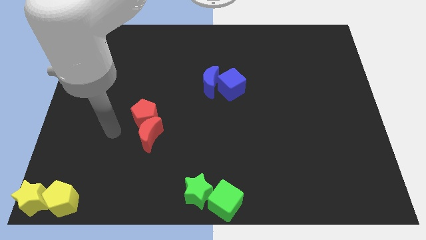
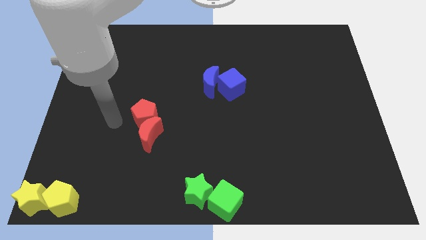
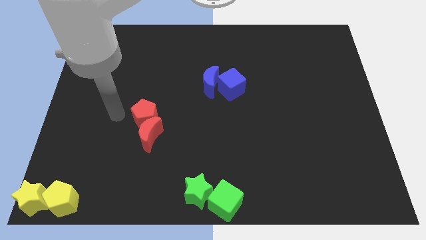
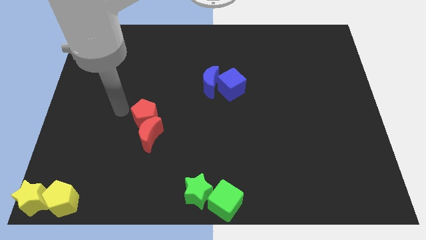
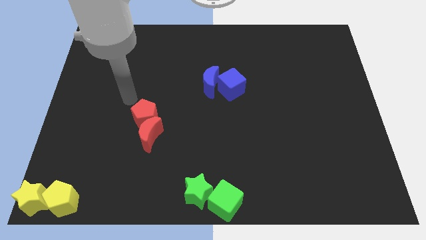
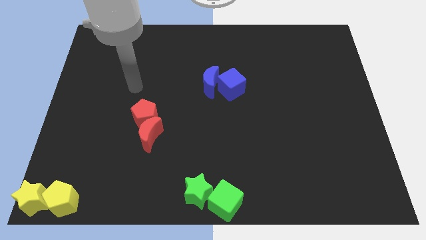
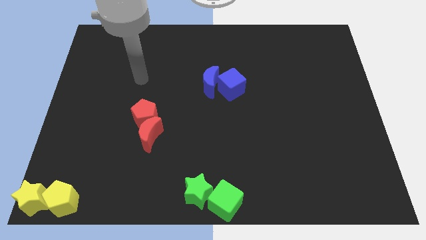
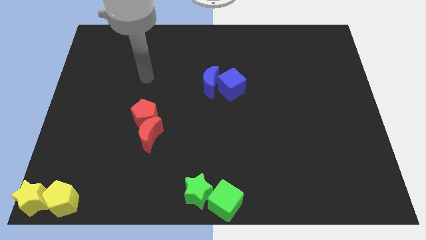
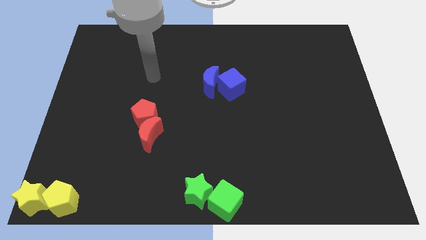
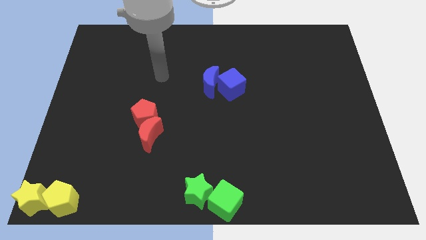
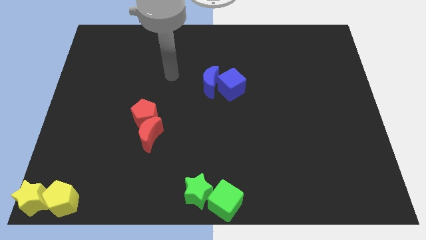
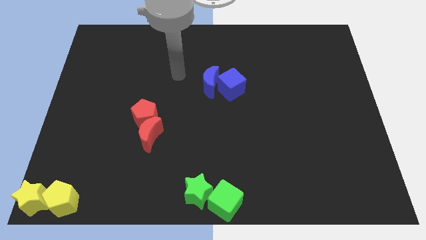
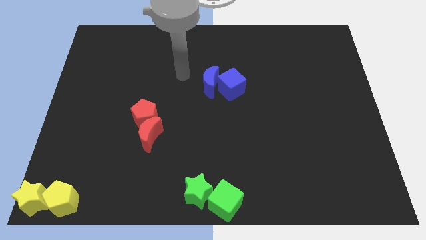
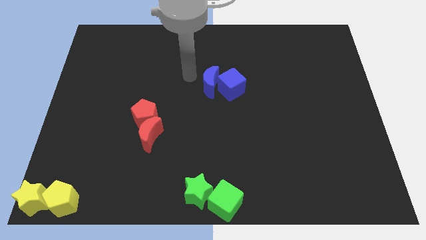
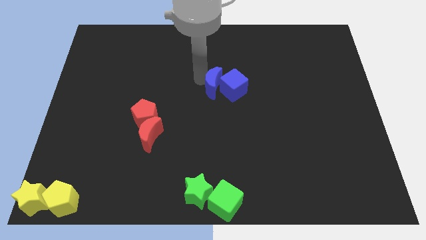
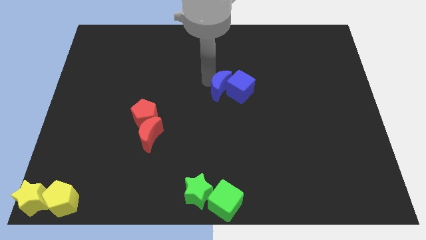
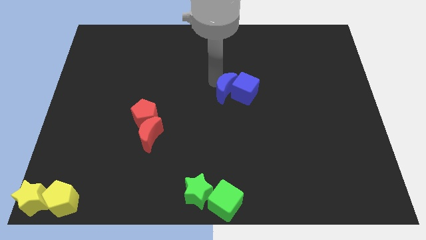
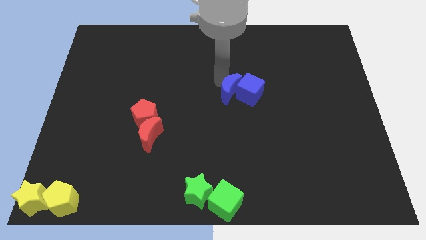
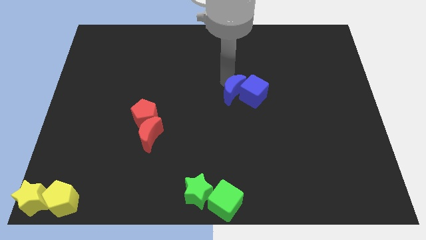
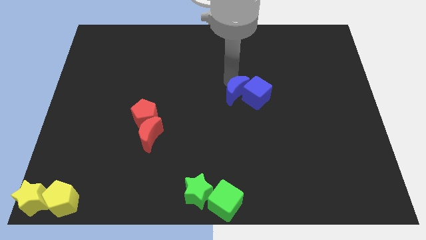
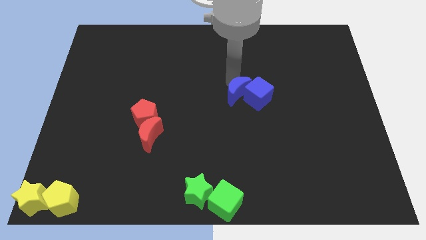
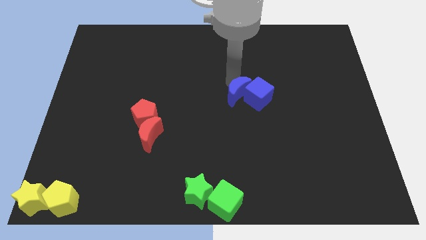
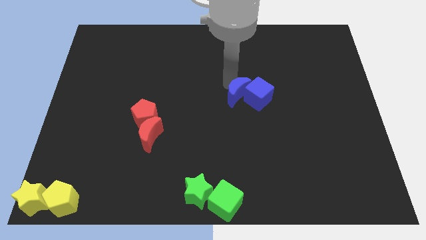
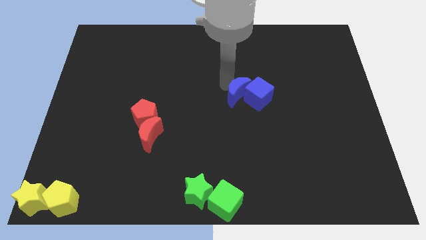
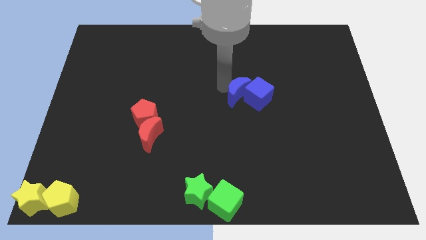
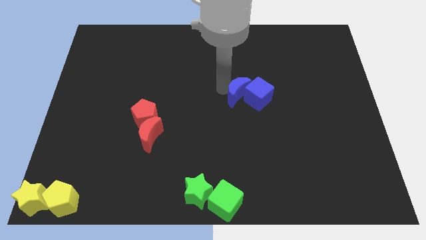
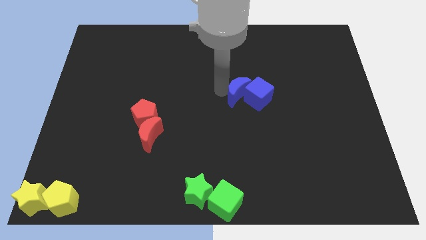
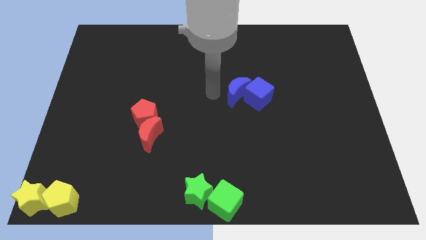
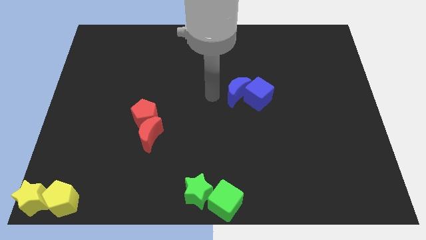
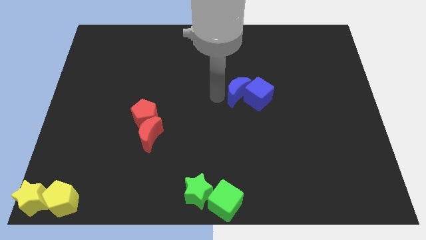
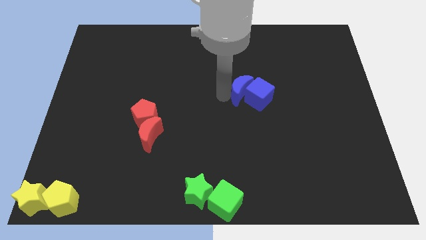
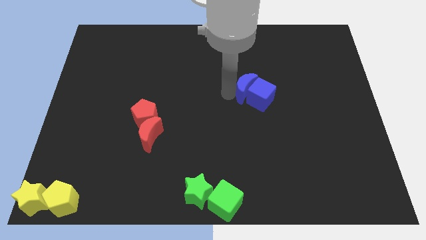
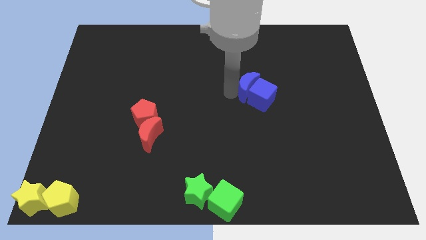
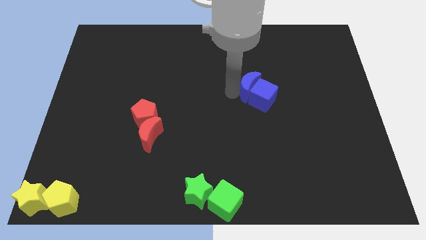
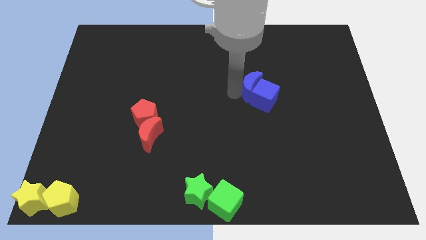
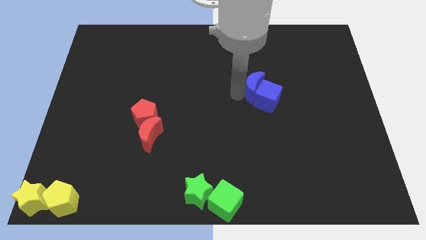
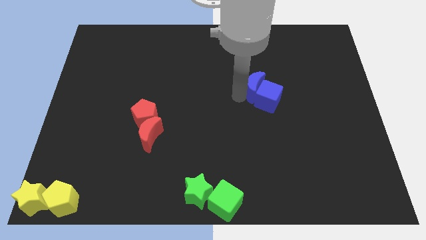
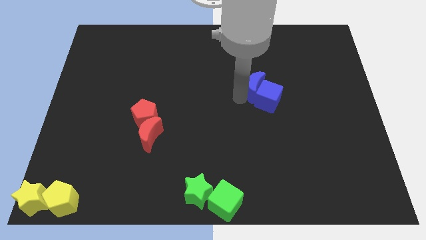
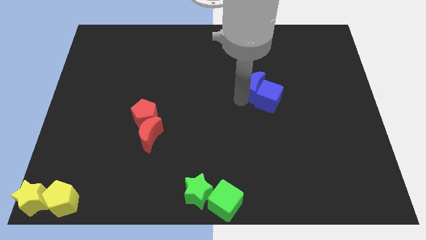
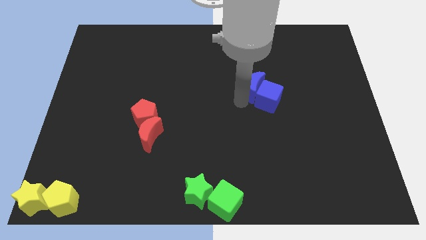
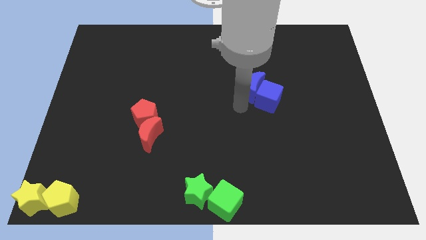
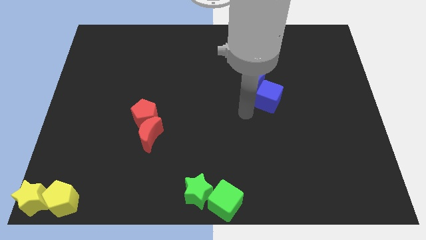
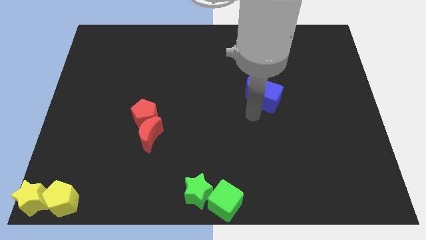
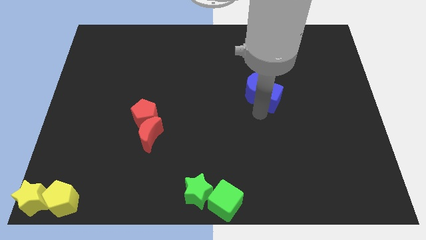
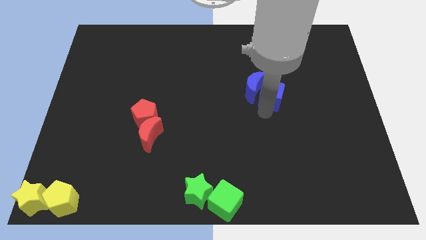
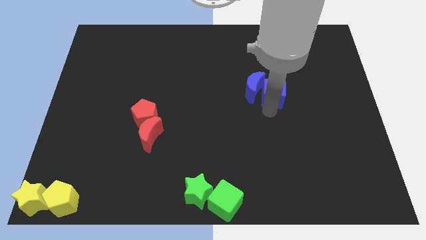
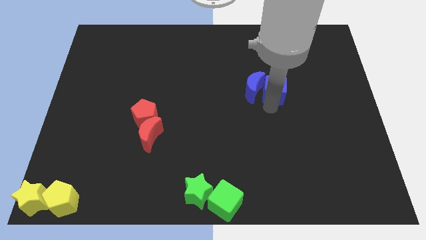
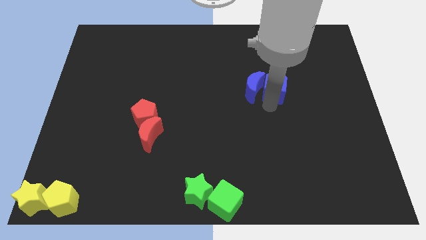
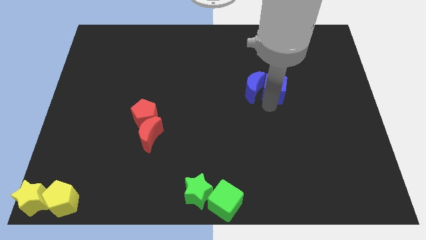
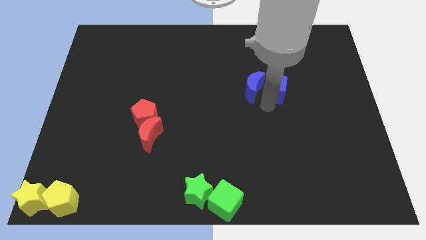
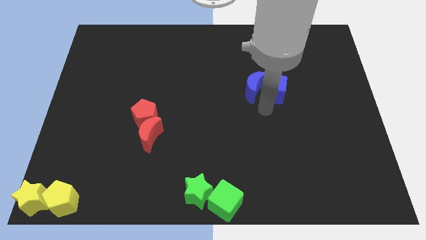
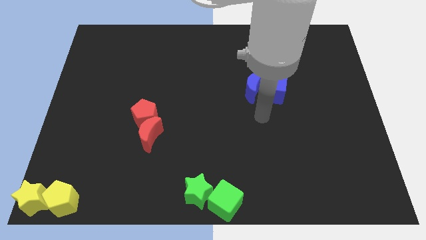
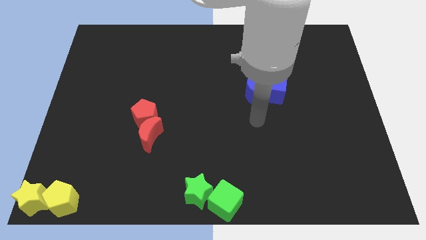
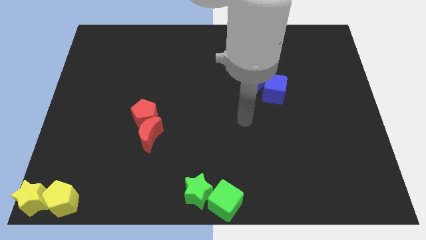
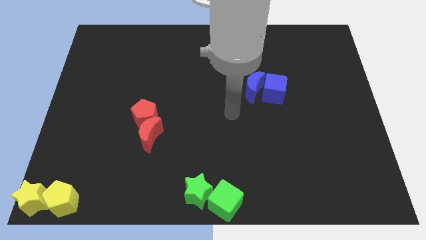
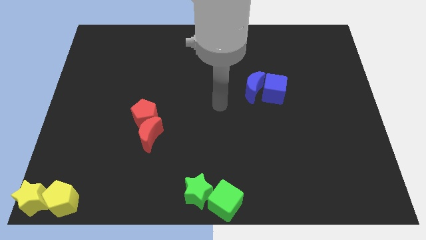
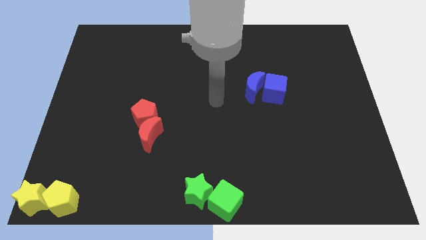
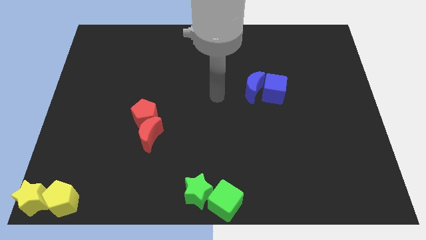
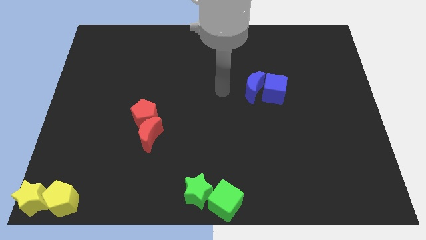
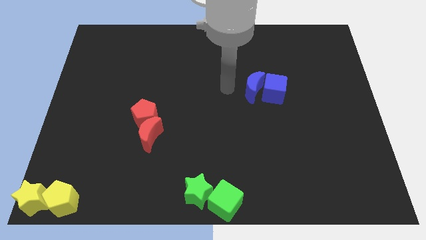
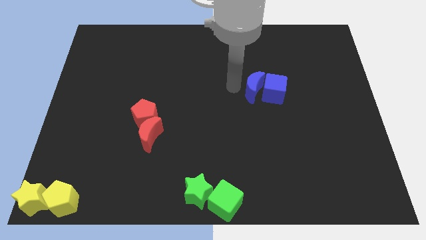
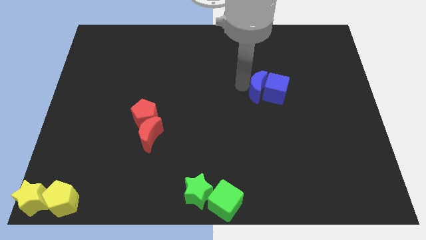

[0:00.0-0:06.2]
push the blue crescent into the blue cube

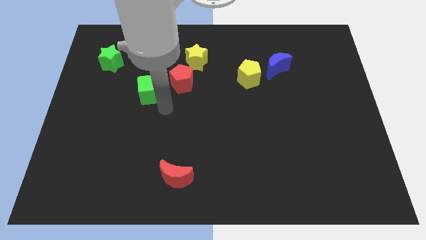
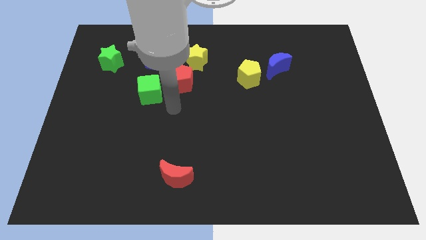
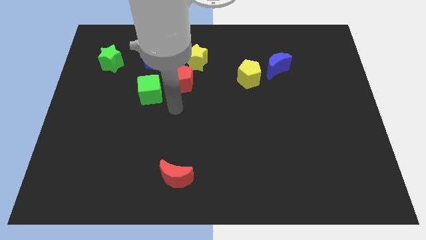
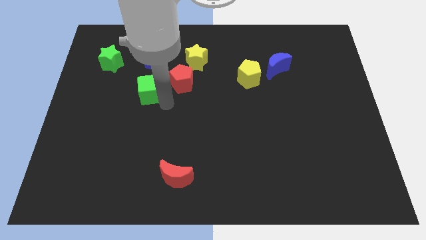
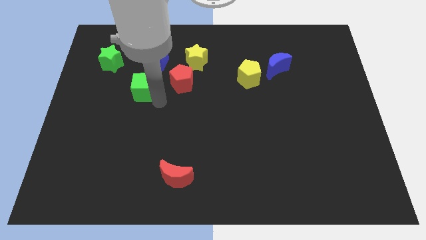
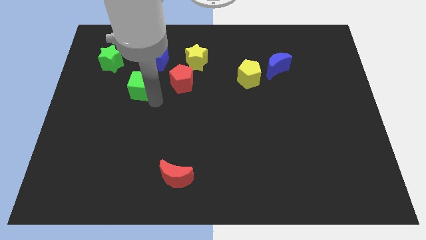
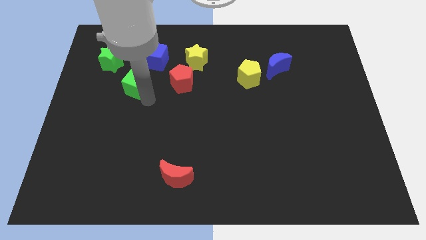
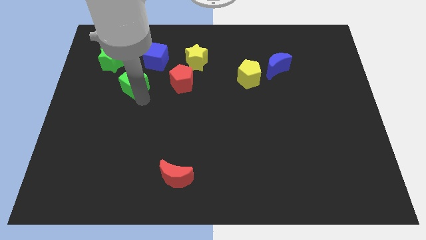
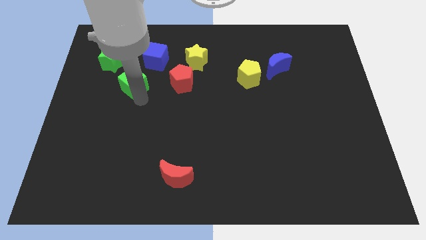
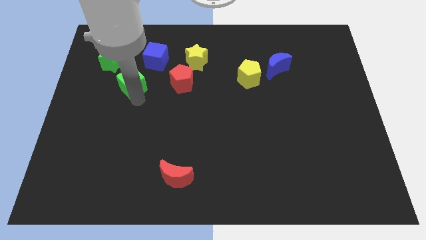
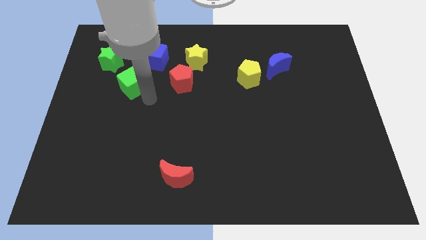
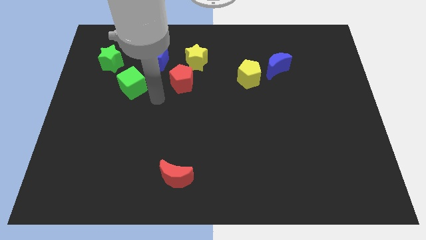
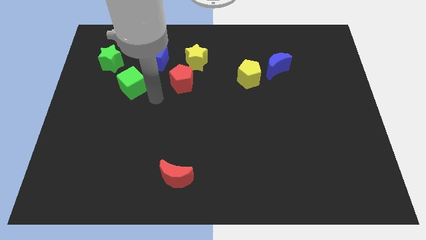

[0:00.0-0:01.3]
place the green cube at the bottom center of the green star and blue cube

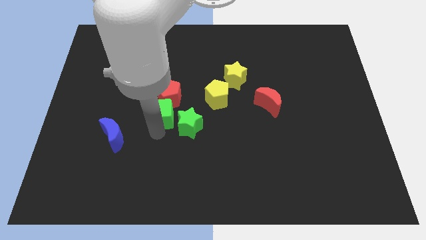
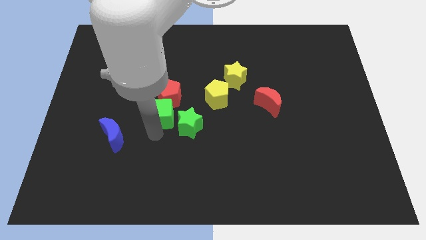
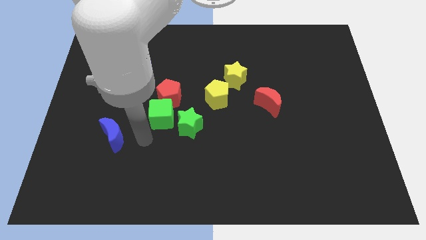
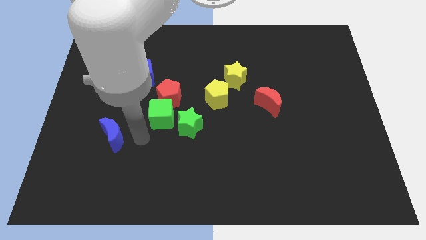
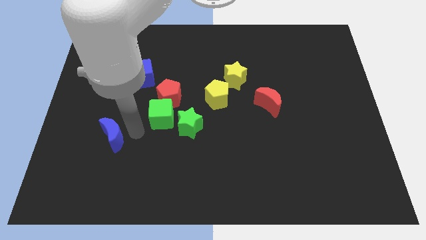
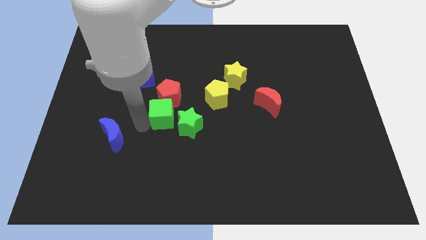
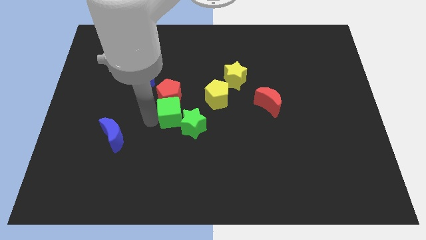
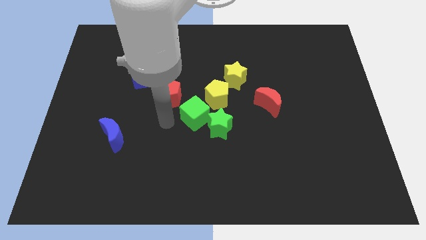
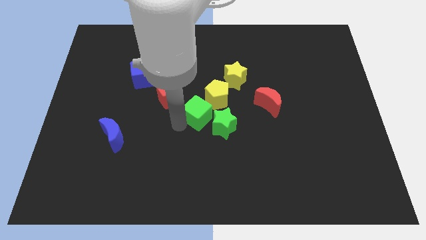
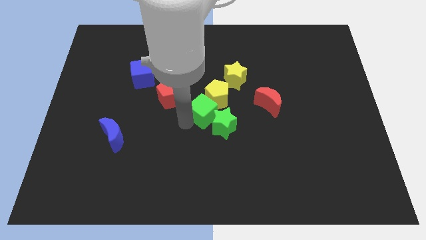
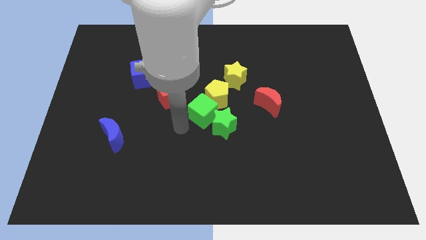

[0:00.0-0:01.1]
group up the green blocks and yellow pentagon

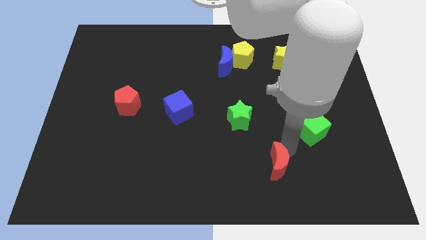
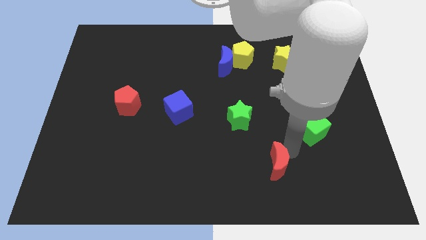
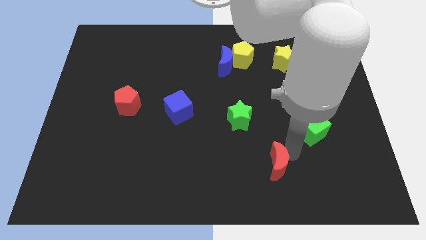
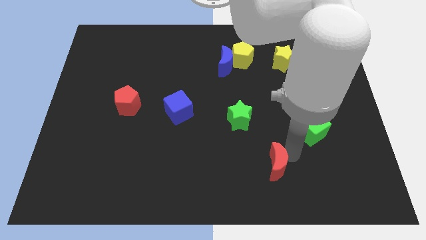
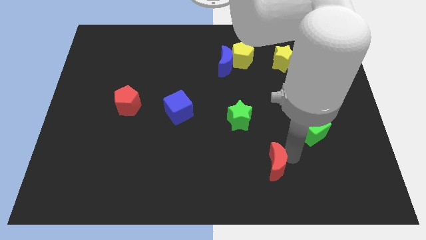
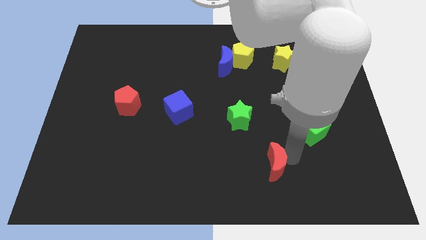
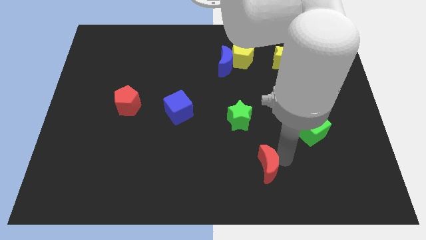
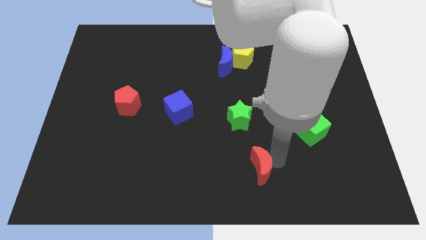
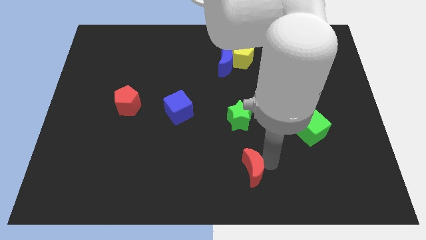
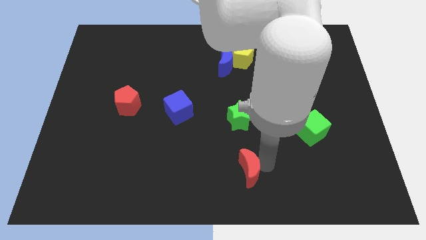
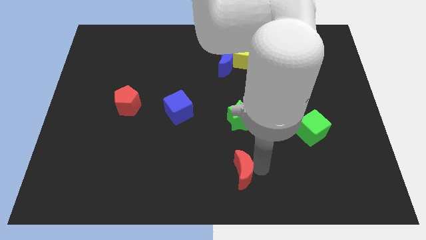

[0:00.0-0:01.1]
move the red crescent to the bottom of the green star
